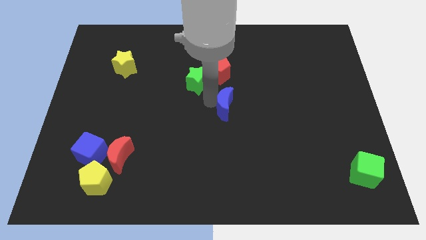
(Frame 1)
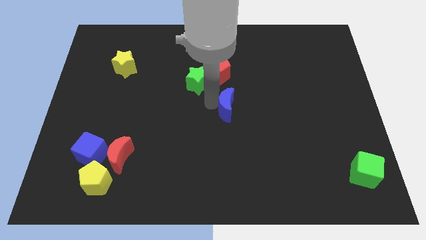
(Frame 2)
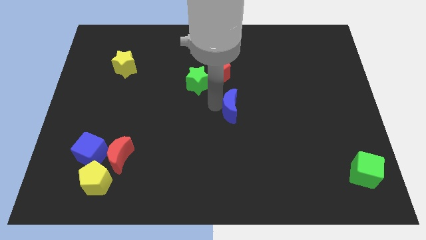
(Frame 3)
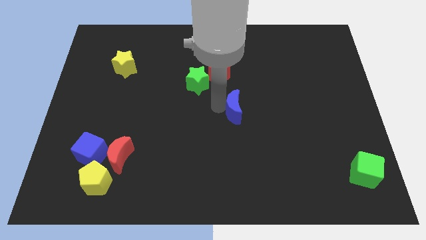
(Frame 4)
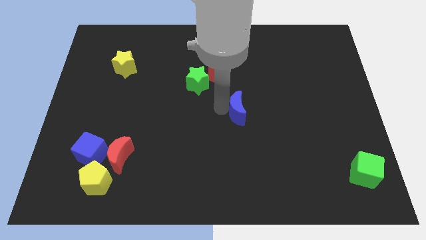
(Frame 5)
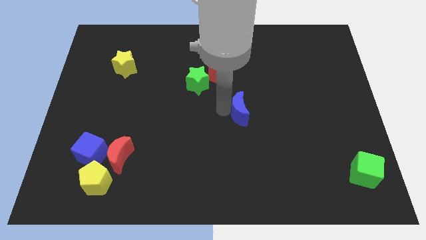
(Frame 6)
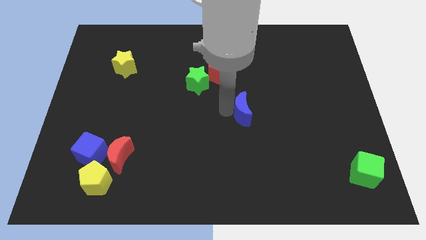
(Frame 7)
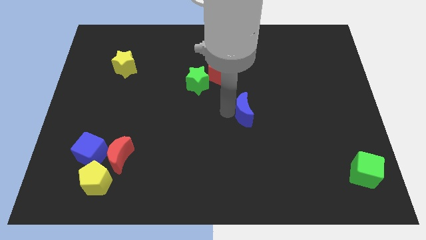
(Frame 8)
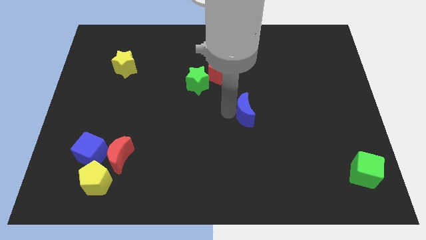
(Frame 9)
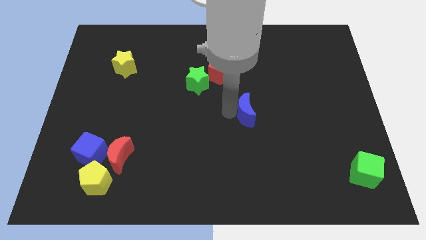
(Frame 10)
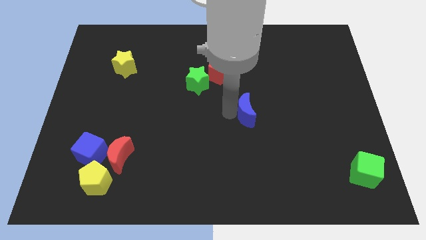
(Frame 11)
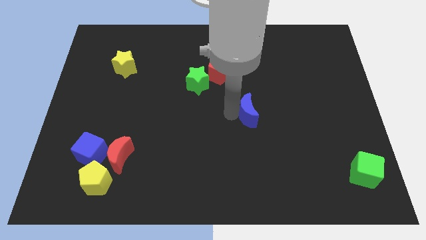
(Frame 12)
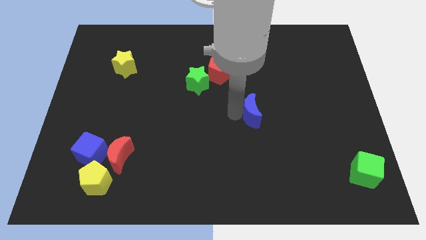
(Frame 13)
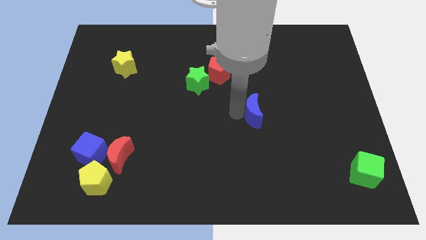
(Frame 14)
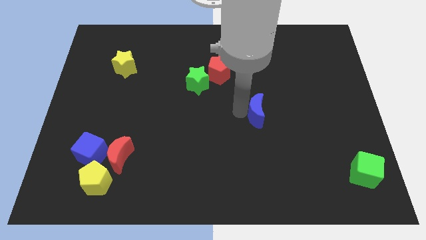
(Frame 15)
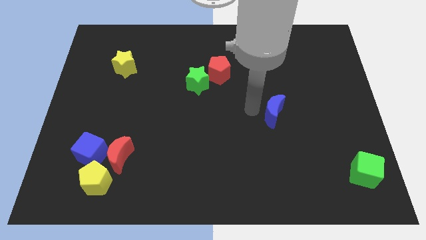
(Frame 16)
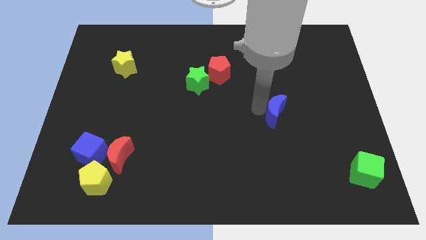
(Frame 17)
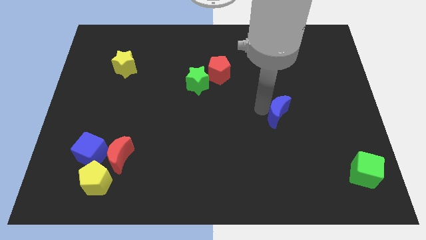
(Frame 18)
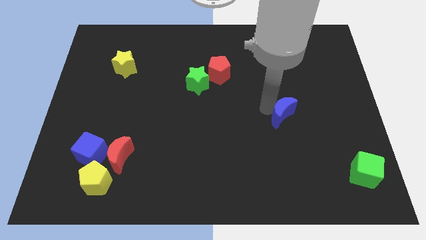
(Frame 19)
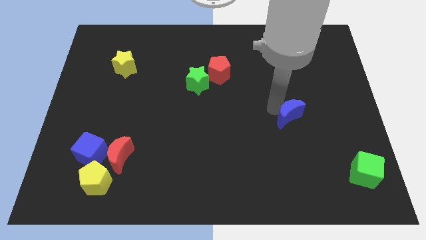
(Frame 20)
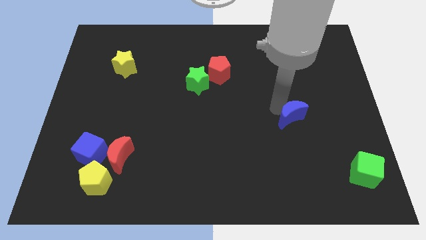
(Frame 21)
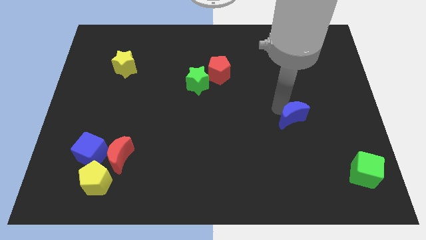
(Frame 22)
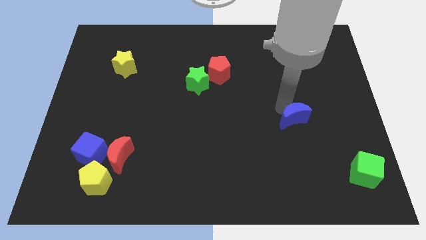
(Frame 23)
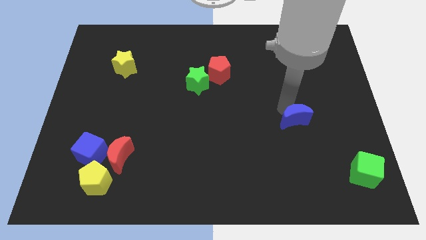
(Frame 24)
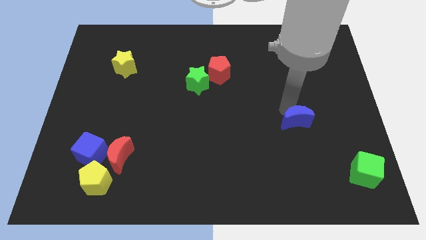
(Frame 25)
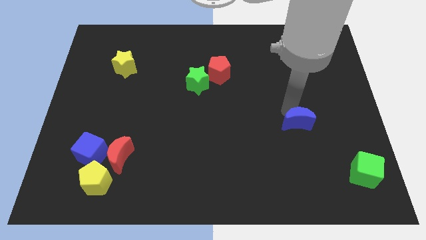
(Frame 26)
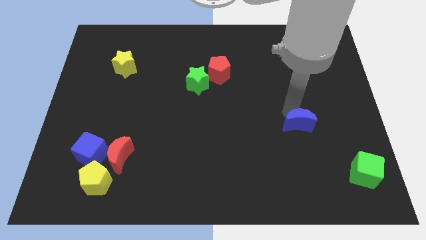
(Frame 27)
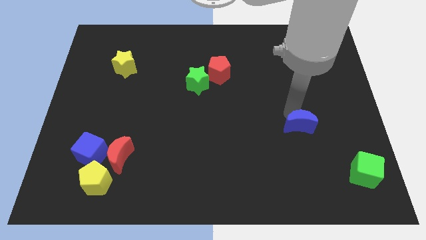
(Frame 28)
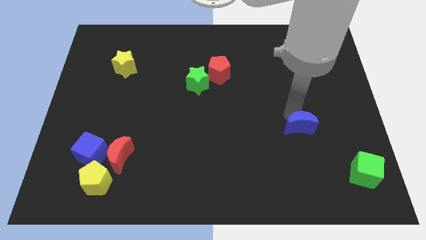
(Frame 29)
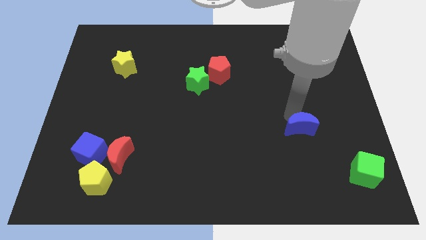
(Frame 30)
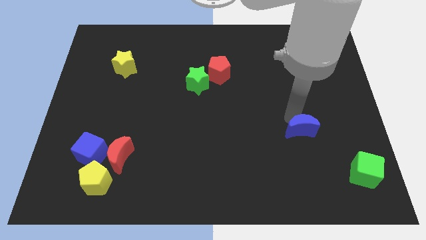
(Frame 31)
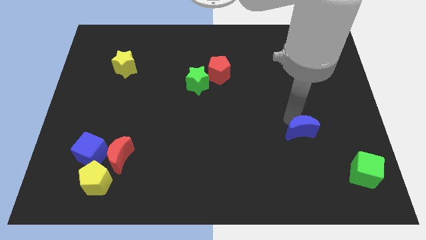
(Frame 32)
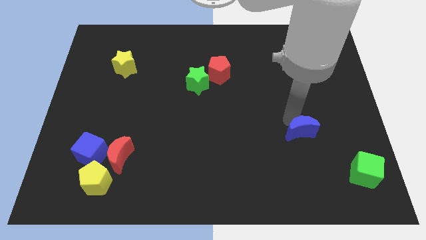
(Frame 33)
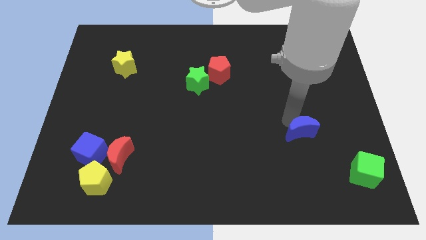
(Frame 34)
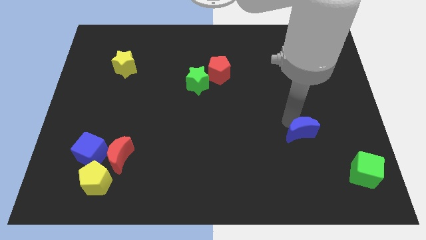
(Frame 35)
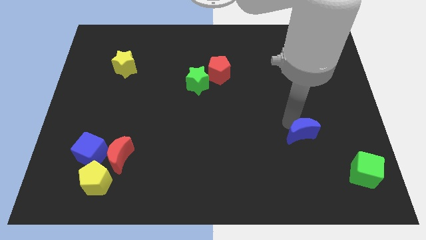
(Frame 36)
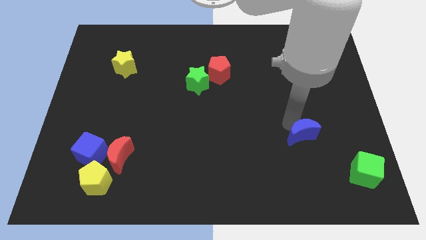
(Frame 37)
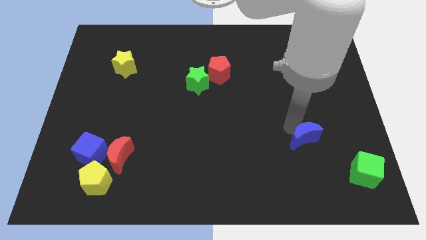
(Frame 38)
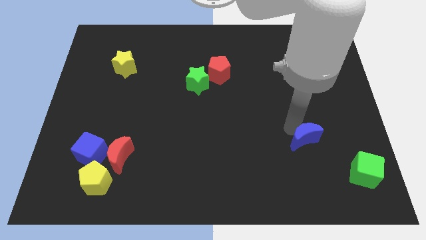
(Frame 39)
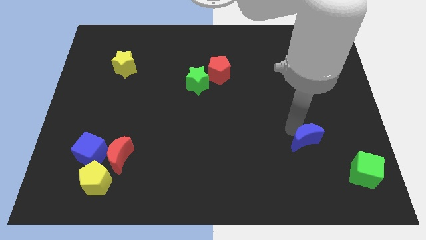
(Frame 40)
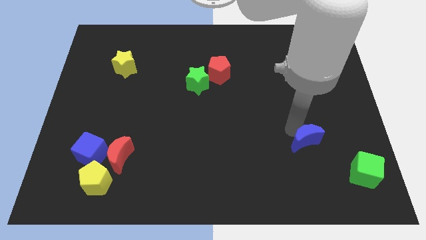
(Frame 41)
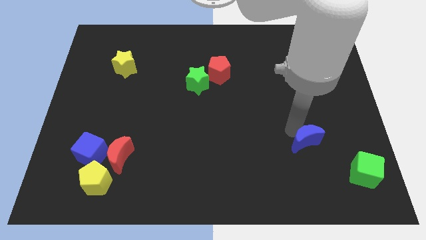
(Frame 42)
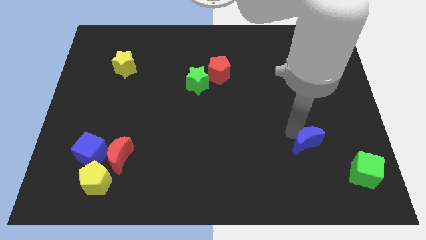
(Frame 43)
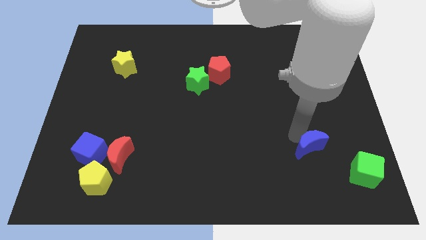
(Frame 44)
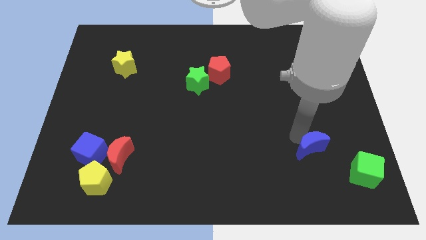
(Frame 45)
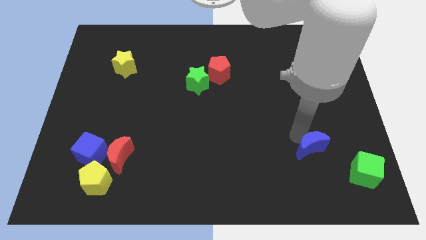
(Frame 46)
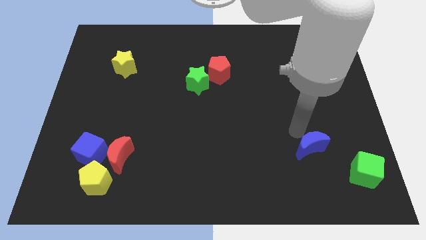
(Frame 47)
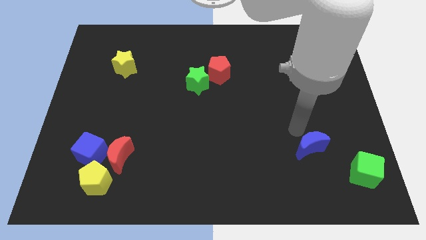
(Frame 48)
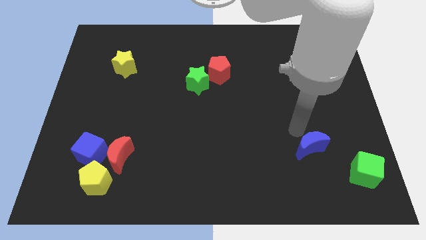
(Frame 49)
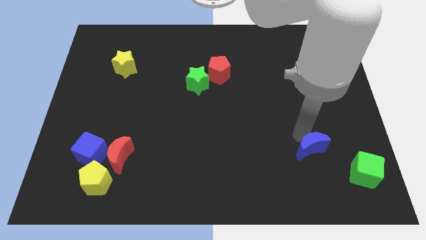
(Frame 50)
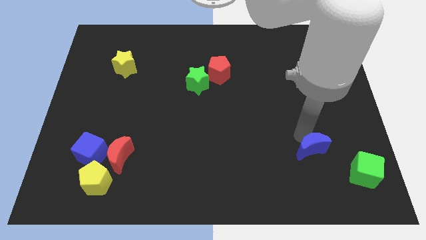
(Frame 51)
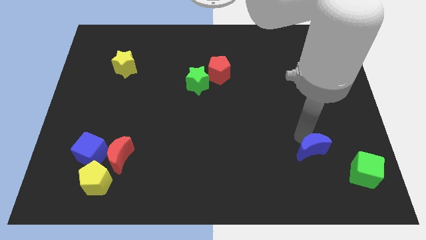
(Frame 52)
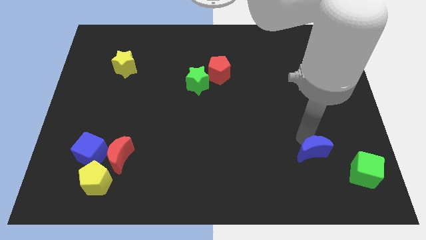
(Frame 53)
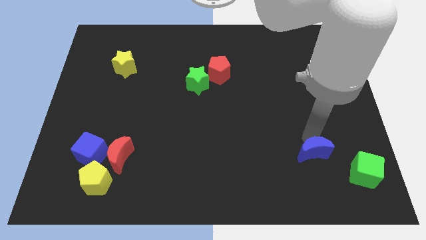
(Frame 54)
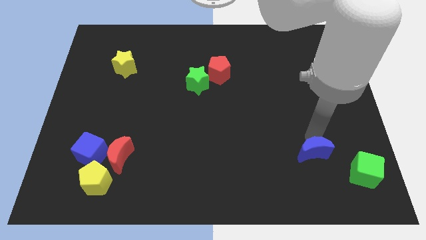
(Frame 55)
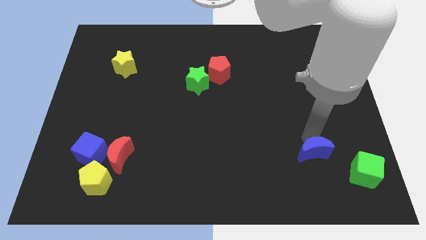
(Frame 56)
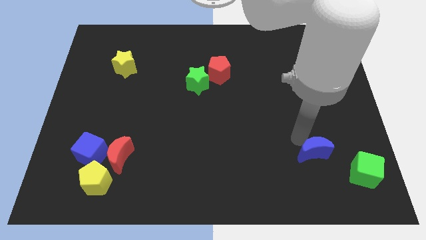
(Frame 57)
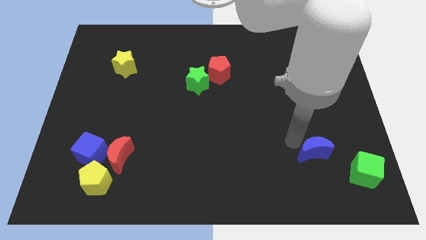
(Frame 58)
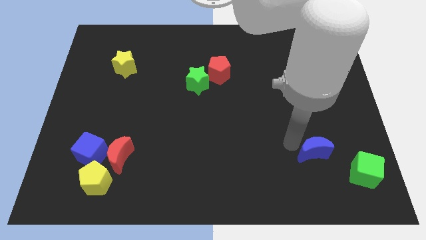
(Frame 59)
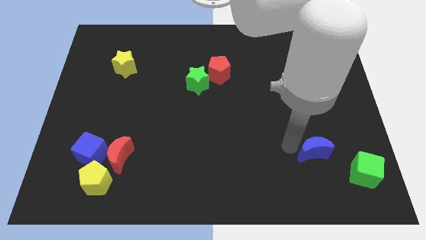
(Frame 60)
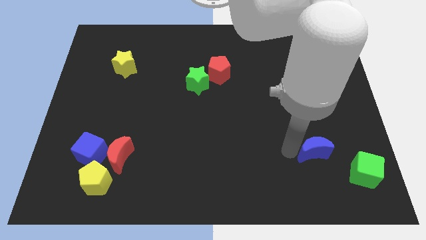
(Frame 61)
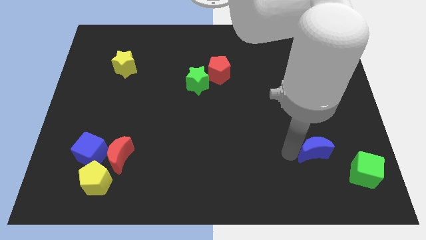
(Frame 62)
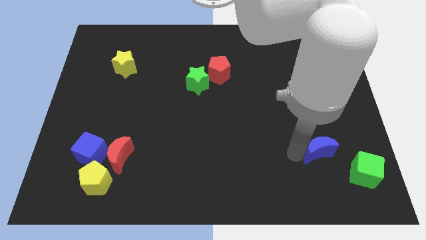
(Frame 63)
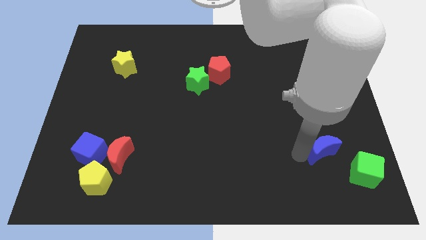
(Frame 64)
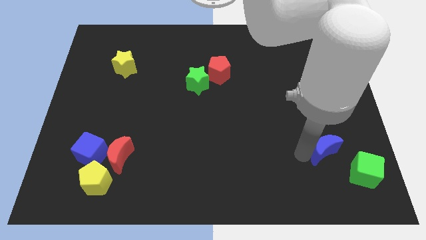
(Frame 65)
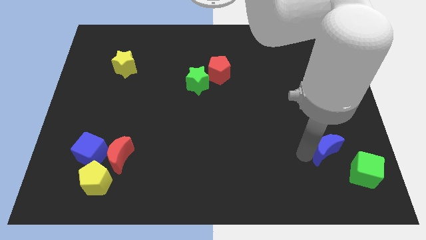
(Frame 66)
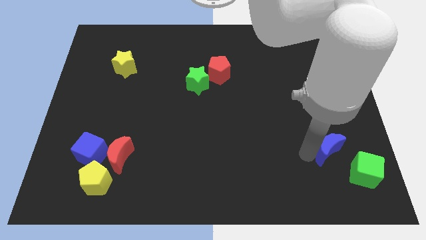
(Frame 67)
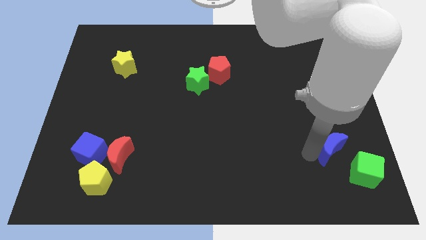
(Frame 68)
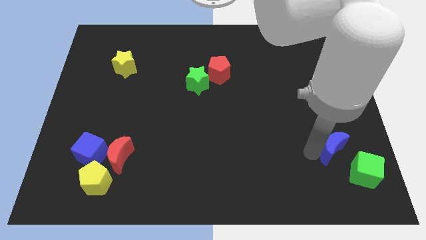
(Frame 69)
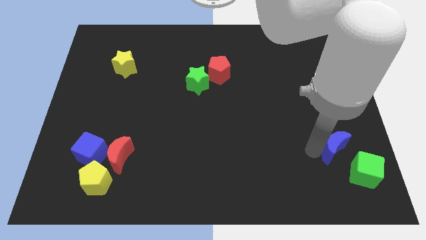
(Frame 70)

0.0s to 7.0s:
move the blue crescent to the top left of the green cube

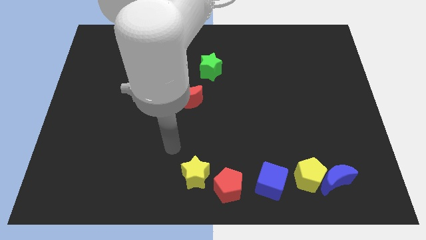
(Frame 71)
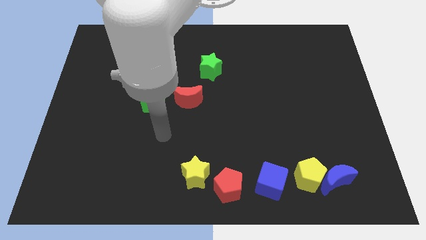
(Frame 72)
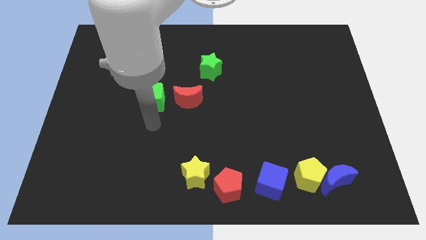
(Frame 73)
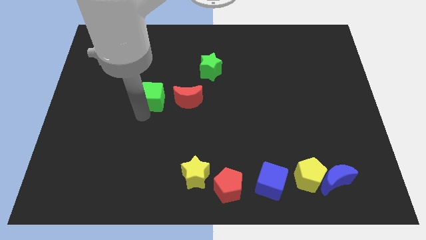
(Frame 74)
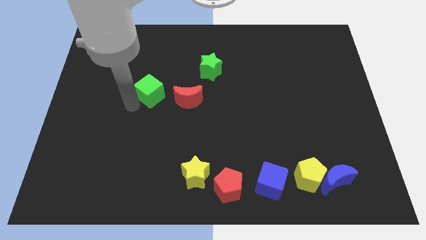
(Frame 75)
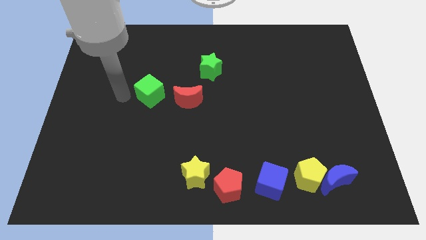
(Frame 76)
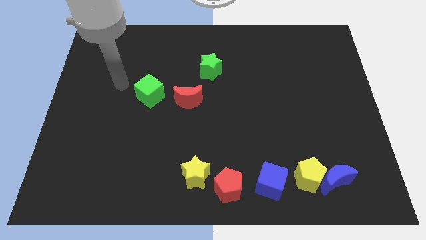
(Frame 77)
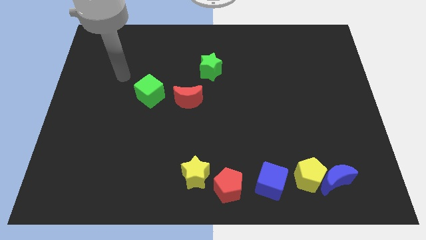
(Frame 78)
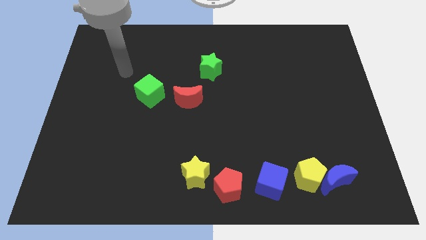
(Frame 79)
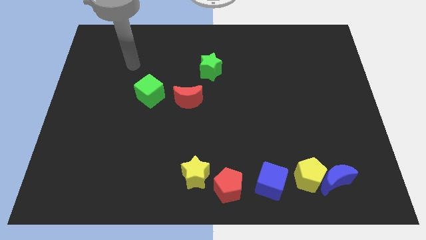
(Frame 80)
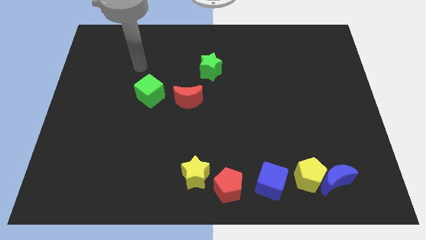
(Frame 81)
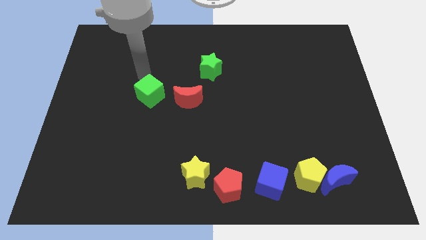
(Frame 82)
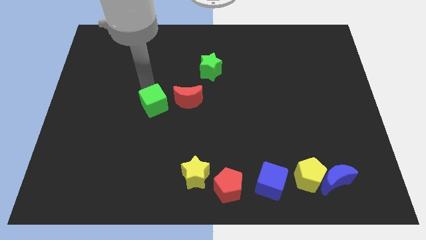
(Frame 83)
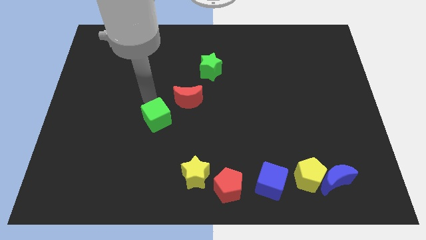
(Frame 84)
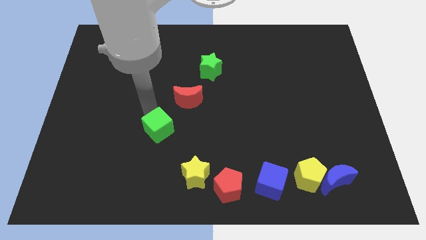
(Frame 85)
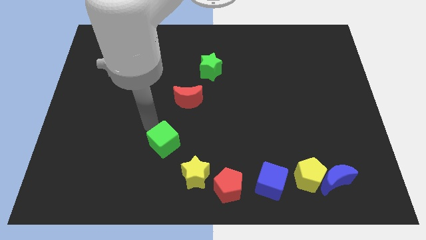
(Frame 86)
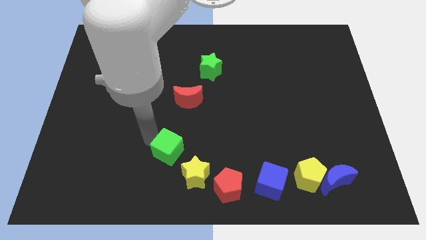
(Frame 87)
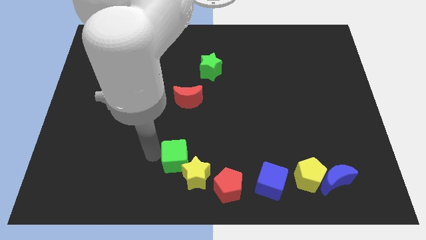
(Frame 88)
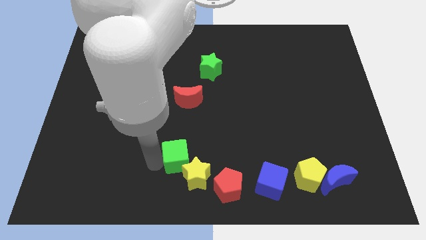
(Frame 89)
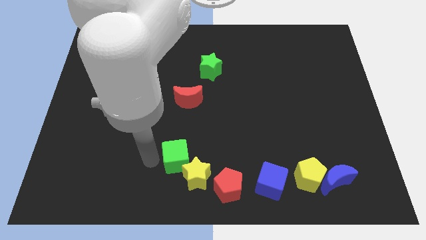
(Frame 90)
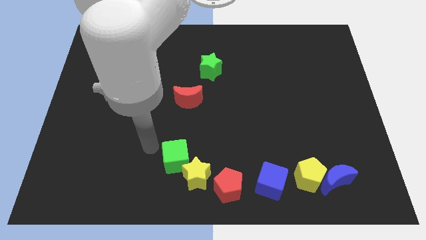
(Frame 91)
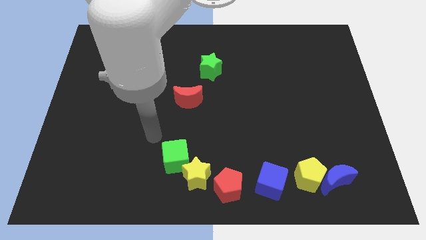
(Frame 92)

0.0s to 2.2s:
place the green cube to the top left of yellow star
